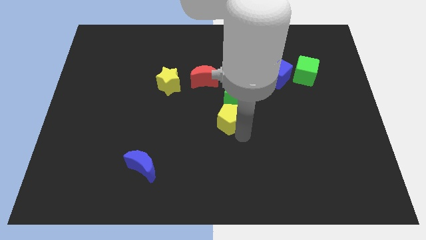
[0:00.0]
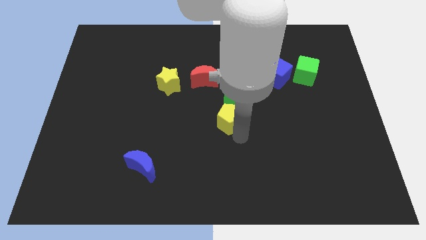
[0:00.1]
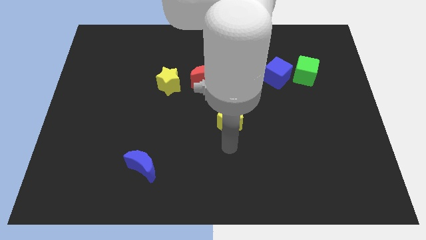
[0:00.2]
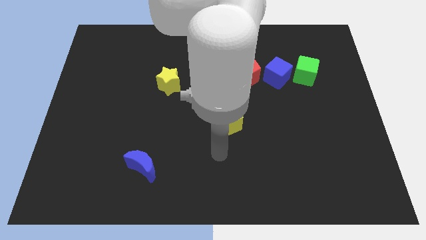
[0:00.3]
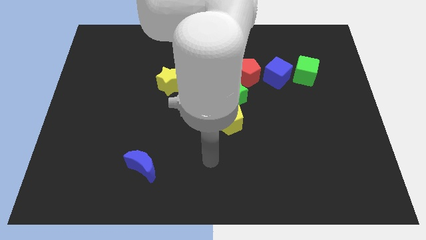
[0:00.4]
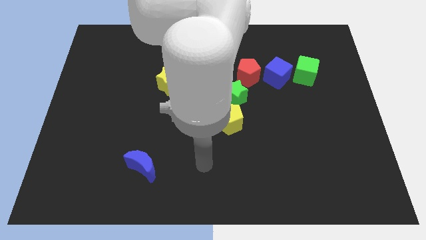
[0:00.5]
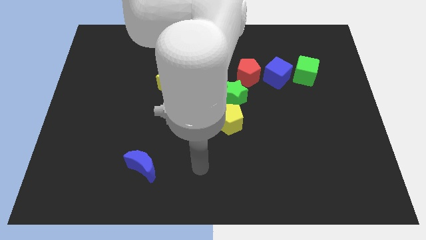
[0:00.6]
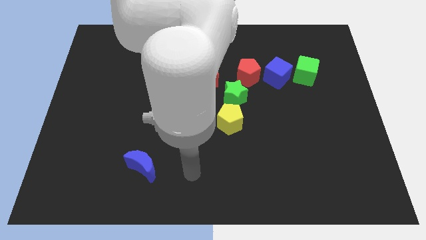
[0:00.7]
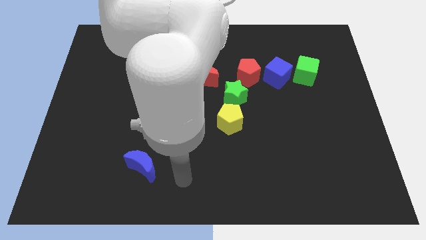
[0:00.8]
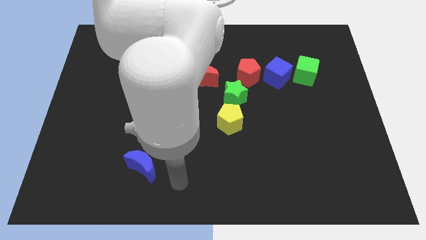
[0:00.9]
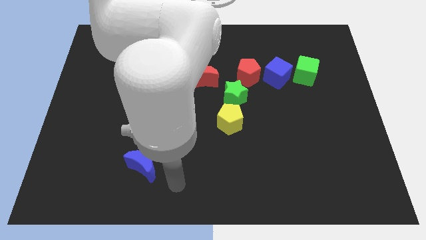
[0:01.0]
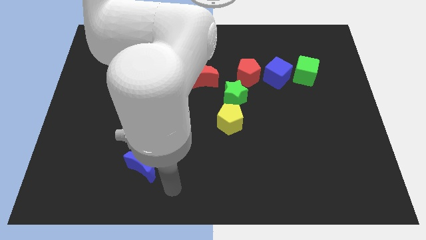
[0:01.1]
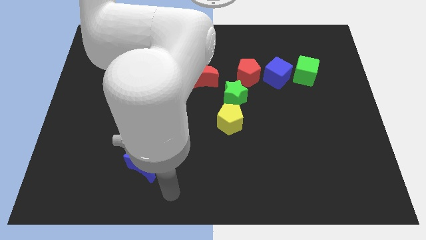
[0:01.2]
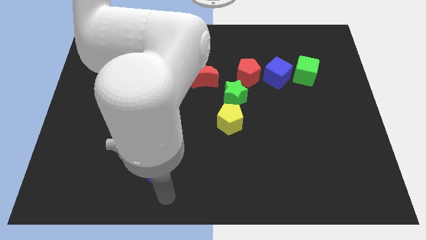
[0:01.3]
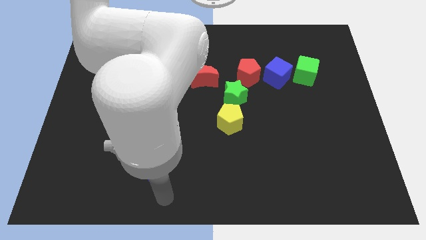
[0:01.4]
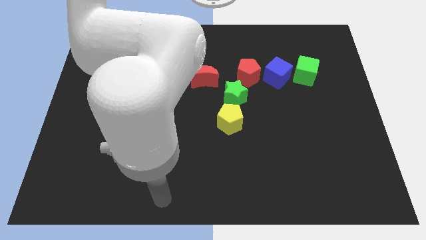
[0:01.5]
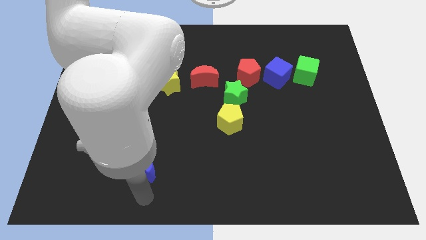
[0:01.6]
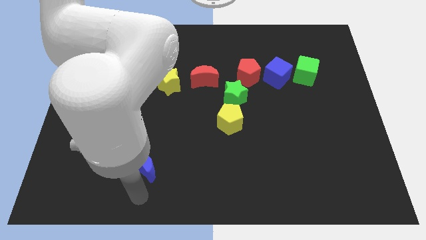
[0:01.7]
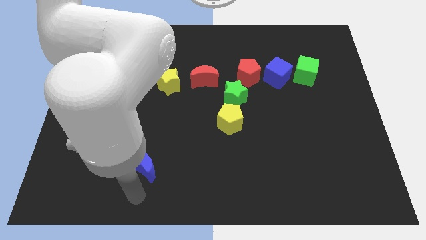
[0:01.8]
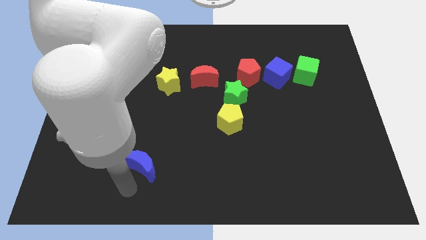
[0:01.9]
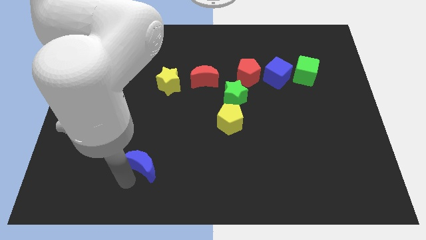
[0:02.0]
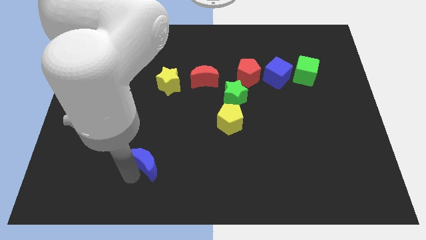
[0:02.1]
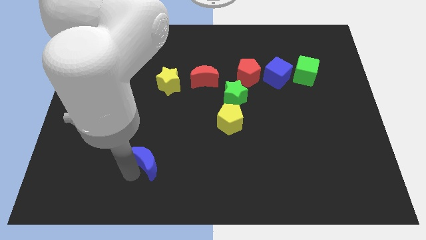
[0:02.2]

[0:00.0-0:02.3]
touch the blue crescent

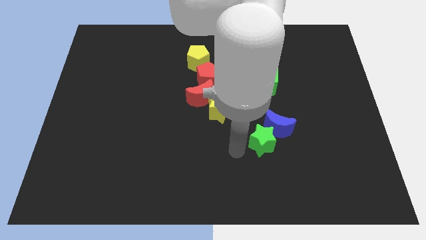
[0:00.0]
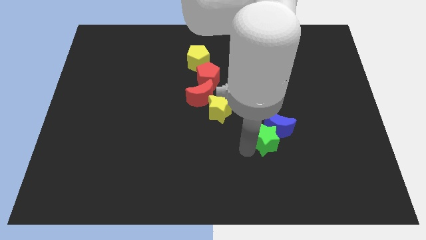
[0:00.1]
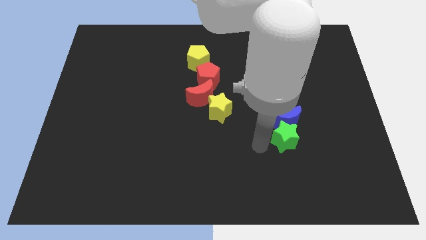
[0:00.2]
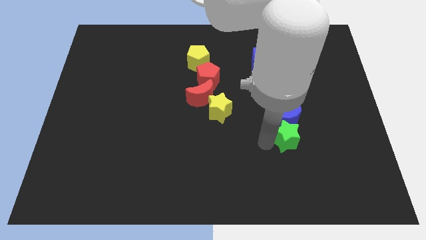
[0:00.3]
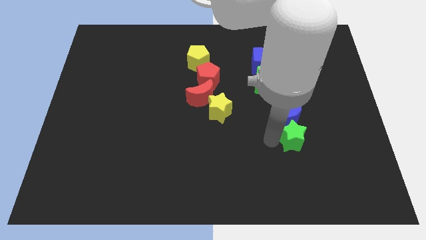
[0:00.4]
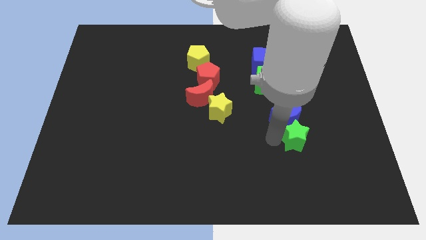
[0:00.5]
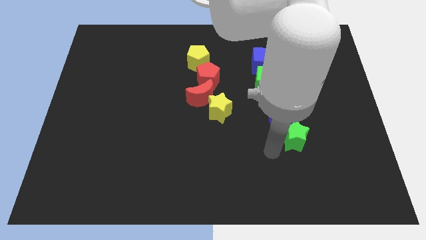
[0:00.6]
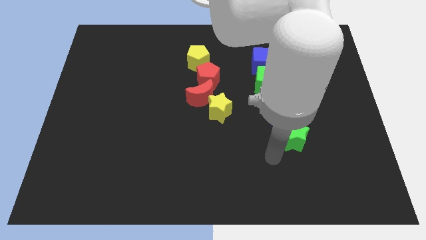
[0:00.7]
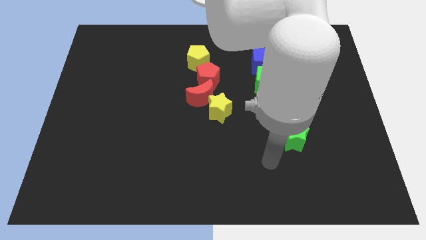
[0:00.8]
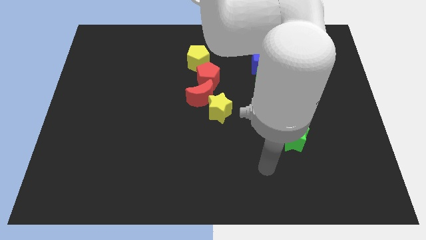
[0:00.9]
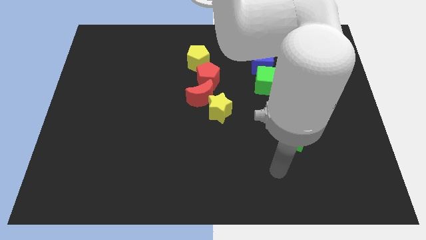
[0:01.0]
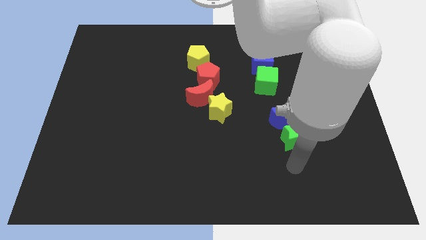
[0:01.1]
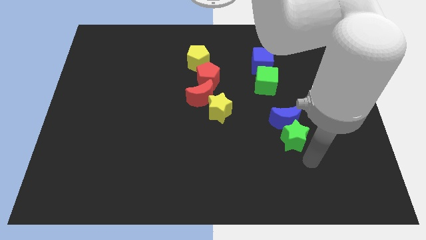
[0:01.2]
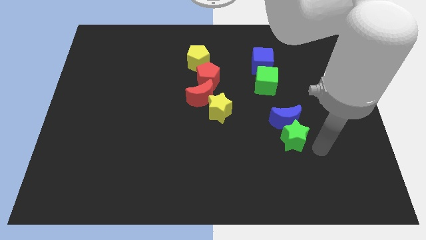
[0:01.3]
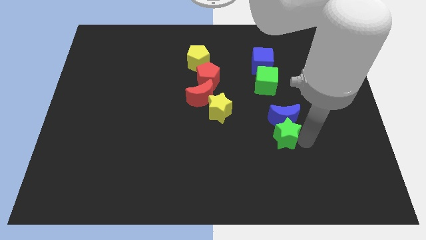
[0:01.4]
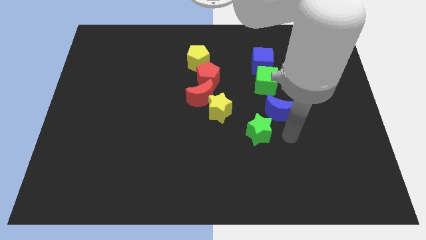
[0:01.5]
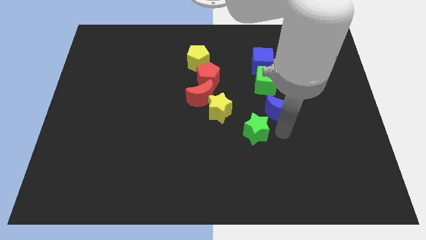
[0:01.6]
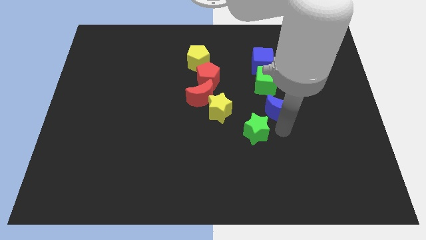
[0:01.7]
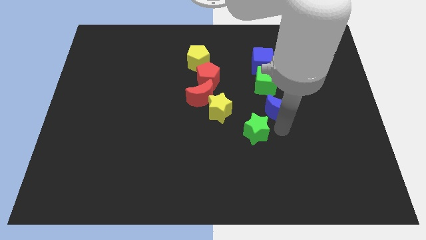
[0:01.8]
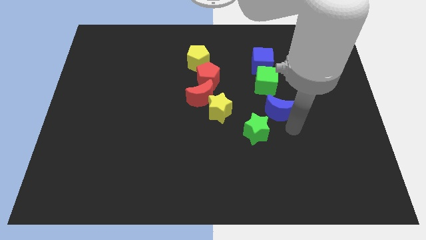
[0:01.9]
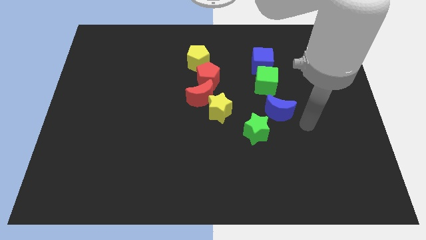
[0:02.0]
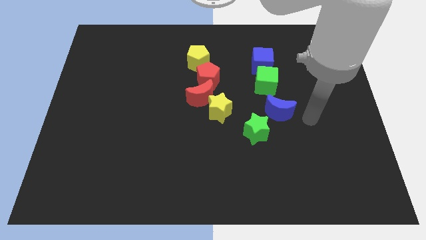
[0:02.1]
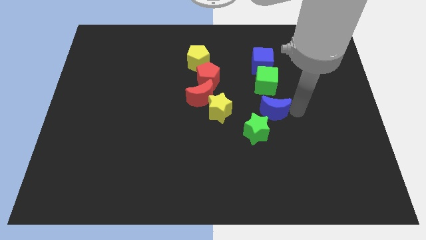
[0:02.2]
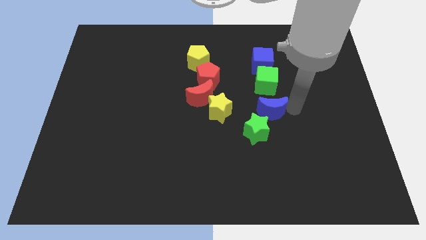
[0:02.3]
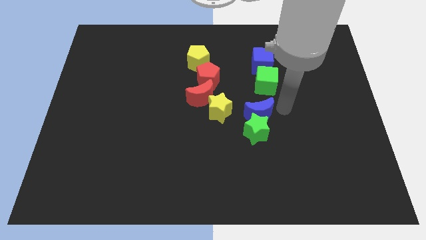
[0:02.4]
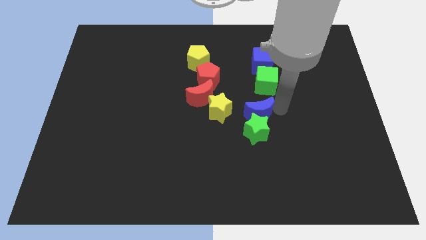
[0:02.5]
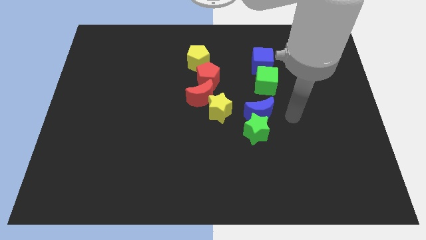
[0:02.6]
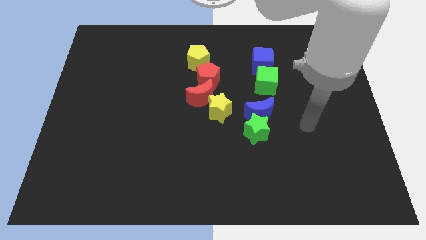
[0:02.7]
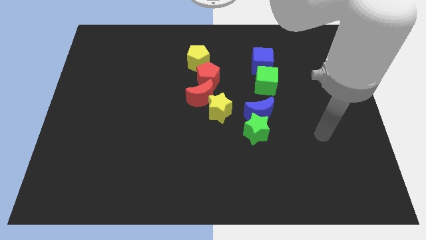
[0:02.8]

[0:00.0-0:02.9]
adjust the green star and blue crescent to form a vertical line

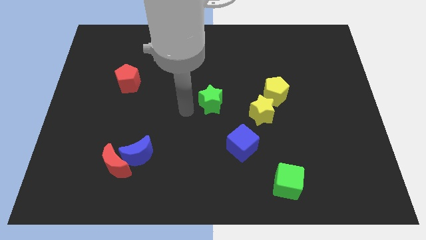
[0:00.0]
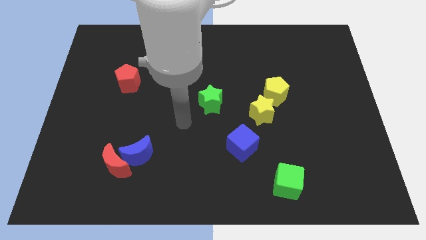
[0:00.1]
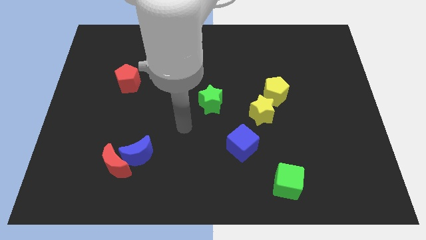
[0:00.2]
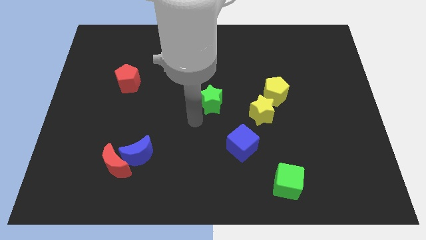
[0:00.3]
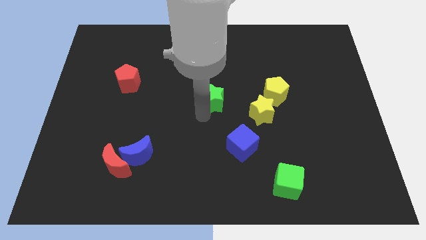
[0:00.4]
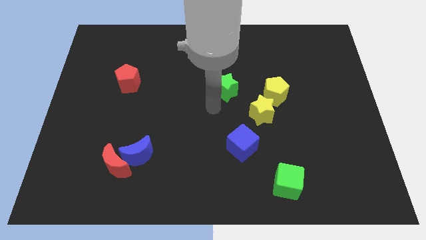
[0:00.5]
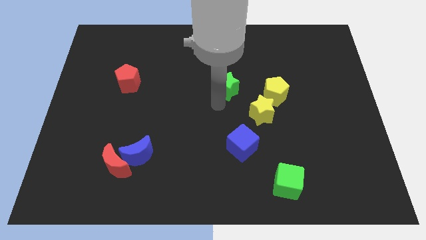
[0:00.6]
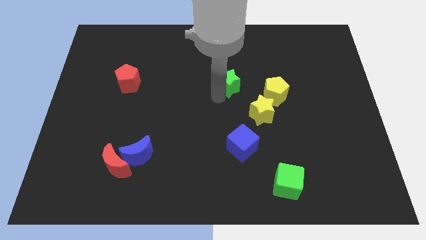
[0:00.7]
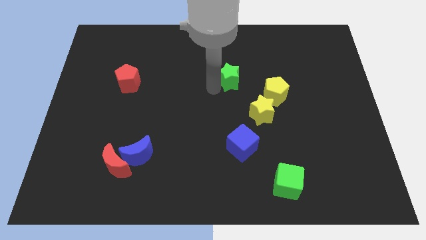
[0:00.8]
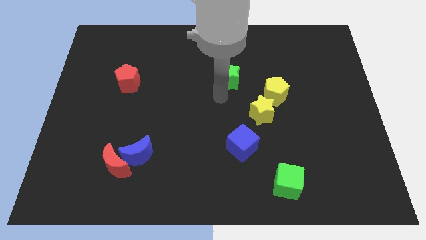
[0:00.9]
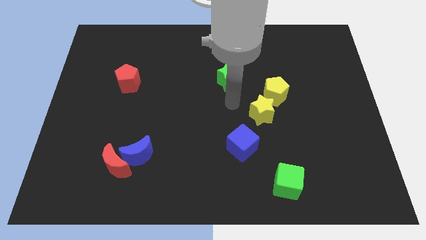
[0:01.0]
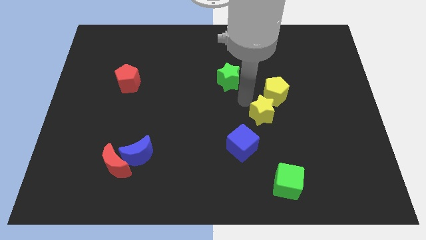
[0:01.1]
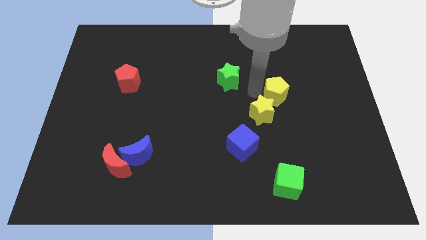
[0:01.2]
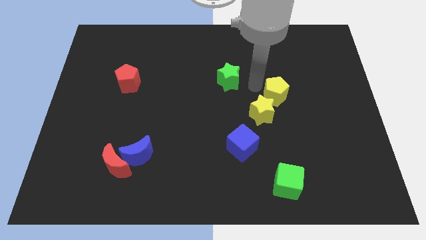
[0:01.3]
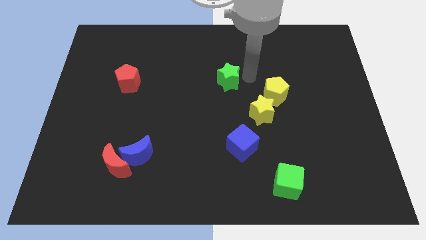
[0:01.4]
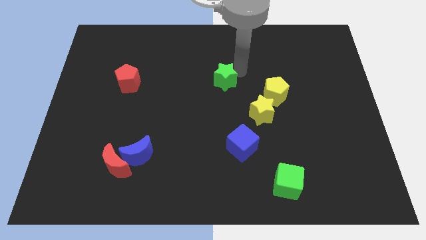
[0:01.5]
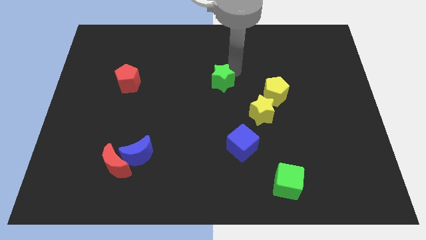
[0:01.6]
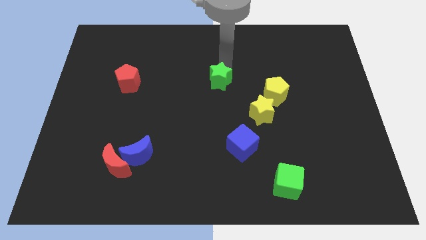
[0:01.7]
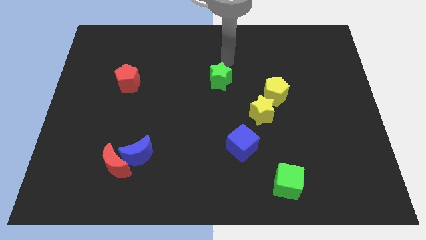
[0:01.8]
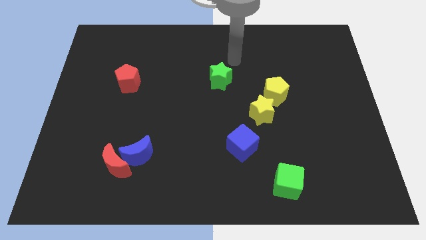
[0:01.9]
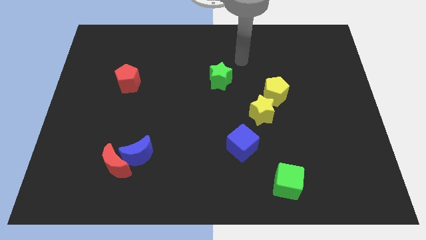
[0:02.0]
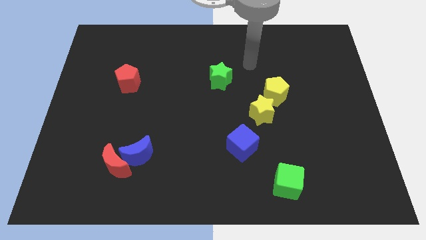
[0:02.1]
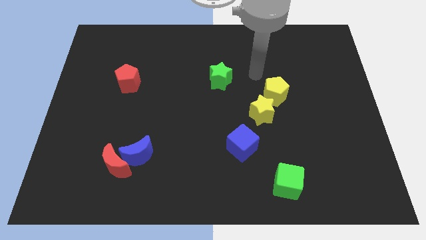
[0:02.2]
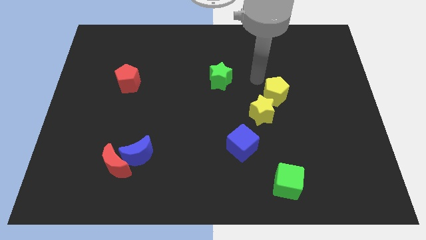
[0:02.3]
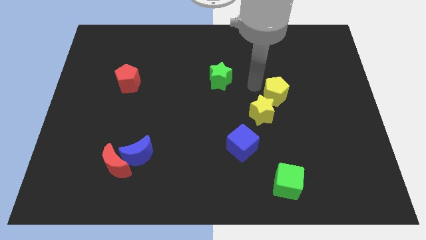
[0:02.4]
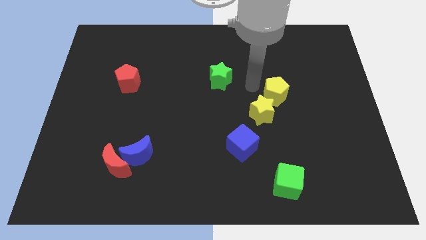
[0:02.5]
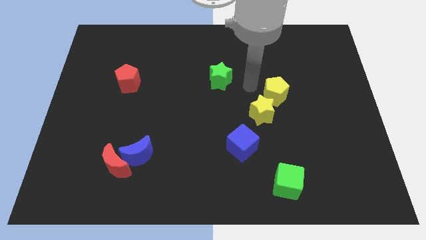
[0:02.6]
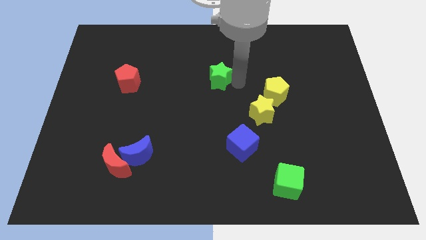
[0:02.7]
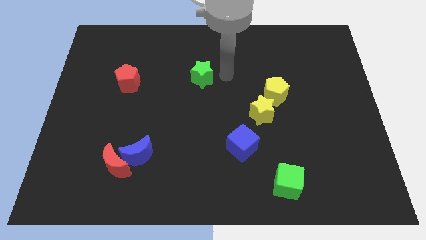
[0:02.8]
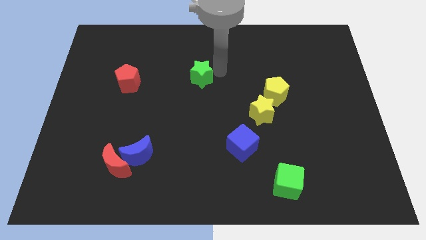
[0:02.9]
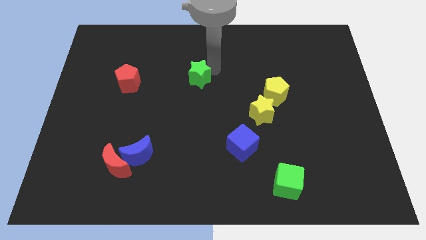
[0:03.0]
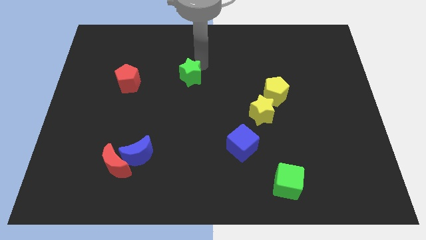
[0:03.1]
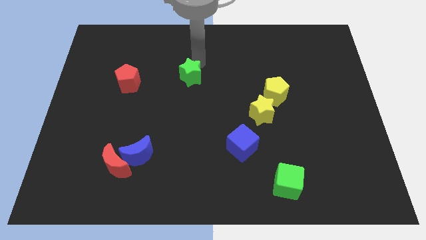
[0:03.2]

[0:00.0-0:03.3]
push the green star towards the left side of the board

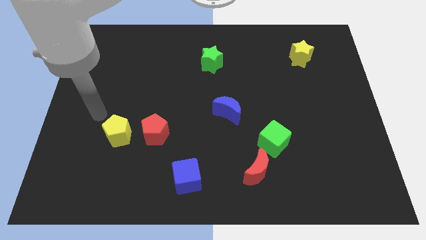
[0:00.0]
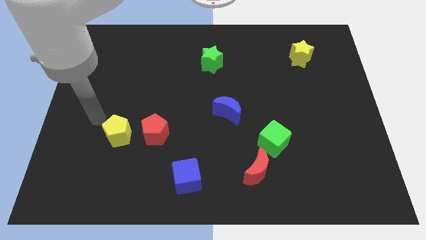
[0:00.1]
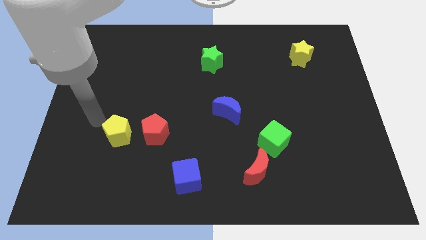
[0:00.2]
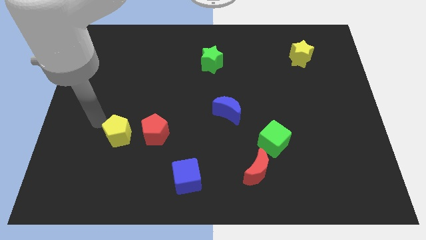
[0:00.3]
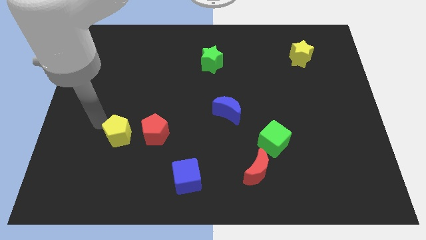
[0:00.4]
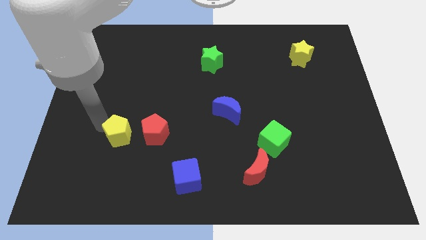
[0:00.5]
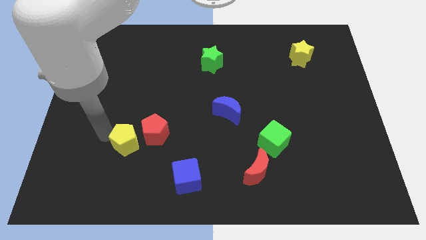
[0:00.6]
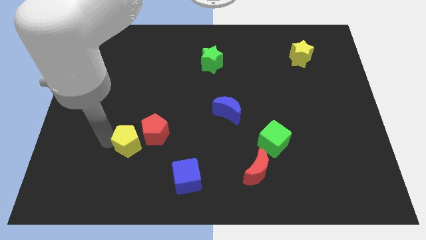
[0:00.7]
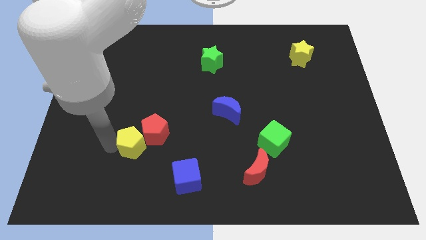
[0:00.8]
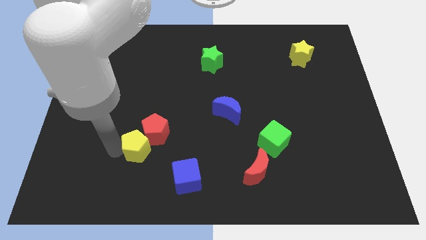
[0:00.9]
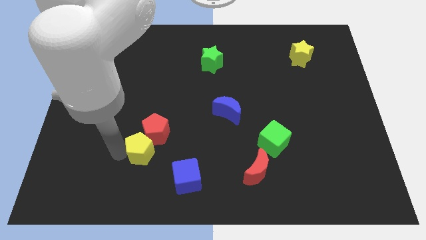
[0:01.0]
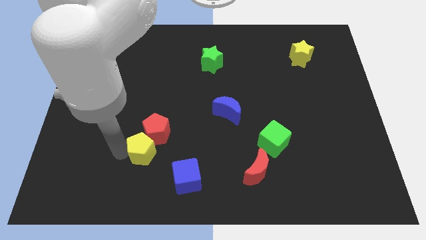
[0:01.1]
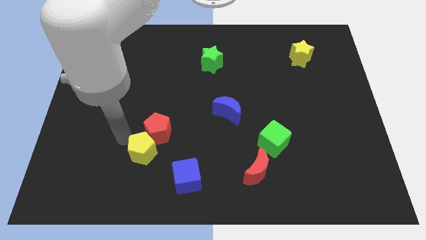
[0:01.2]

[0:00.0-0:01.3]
push the yellow pentagon into the red pentagon
